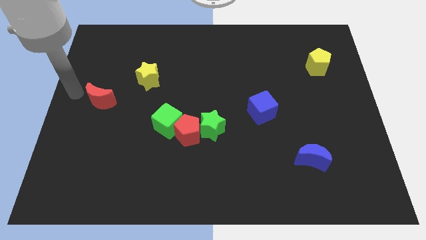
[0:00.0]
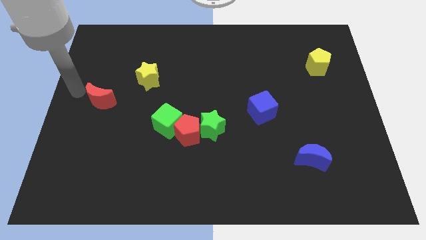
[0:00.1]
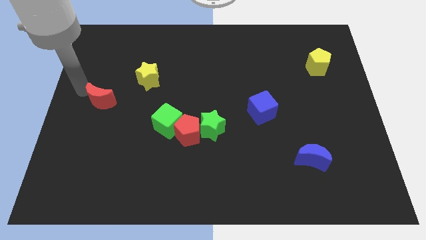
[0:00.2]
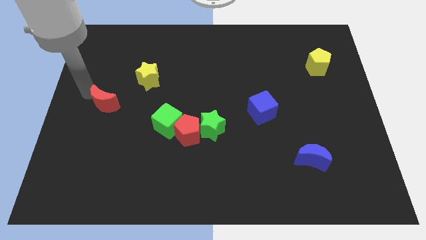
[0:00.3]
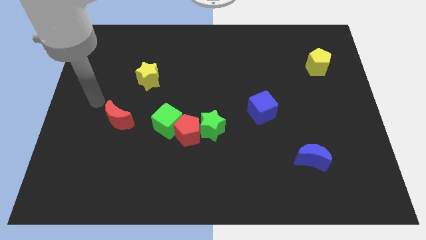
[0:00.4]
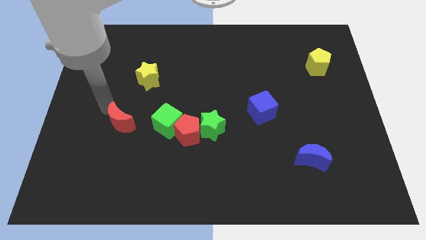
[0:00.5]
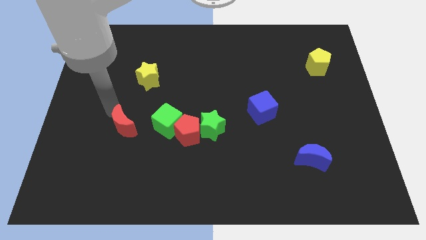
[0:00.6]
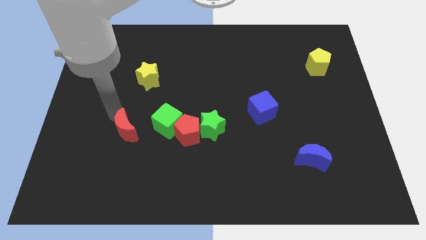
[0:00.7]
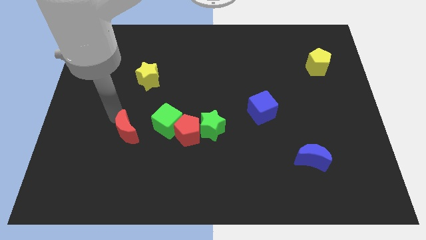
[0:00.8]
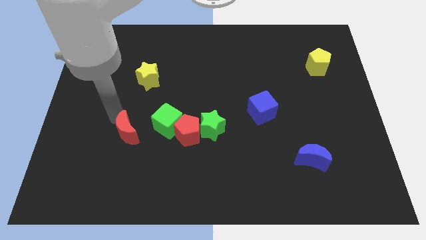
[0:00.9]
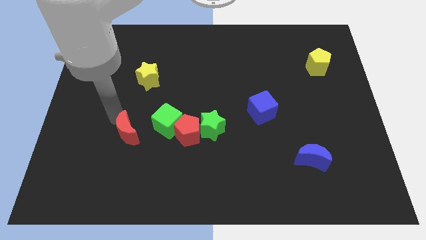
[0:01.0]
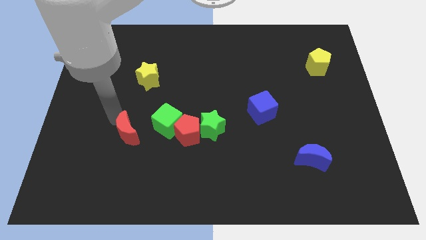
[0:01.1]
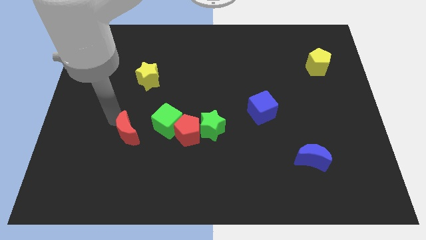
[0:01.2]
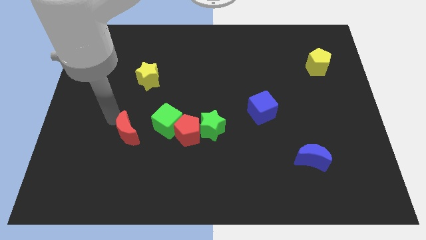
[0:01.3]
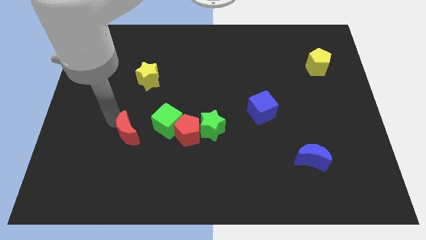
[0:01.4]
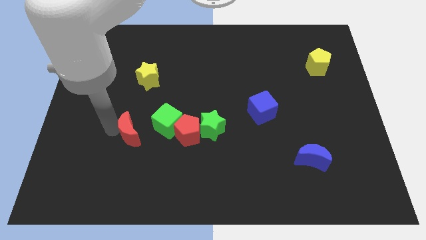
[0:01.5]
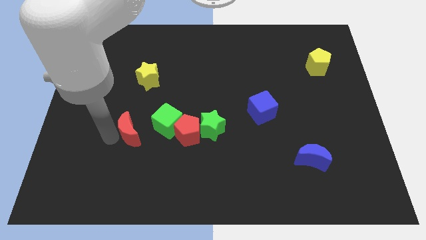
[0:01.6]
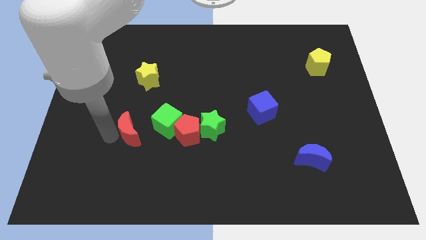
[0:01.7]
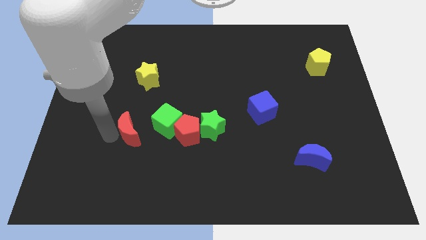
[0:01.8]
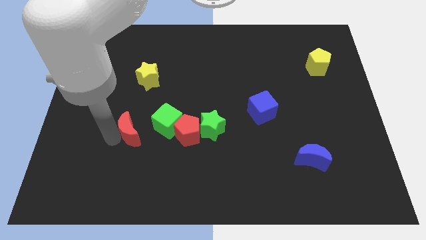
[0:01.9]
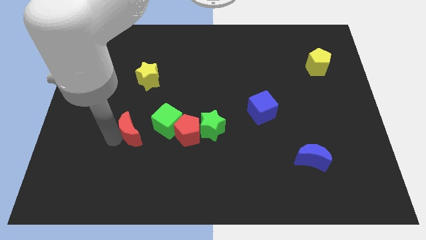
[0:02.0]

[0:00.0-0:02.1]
move the red crescent towards the left of the green cube

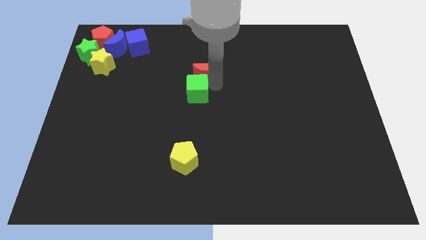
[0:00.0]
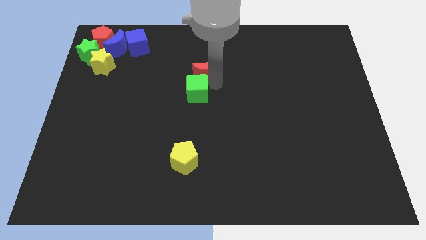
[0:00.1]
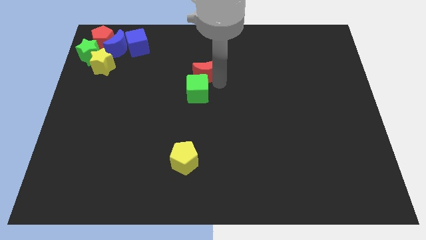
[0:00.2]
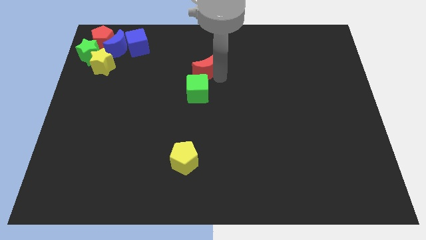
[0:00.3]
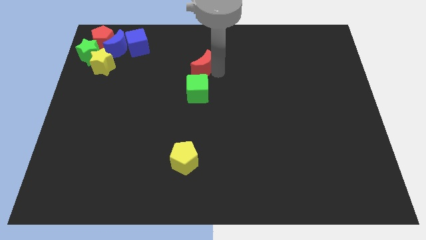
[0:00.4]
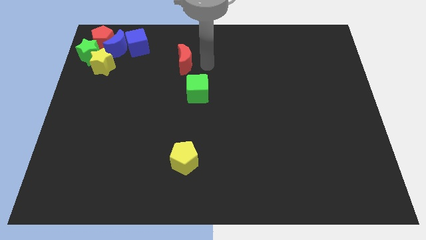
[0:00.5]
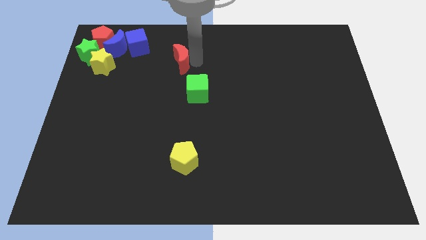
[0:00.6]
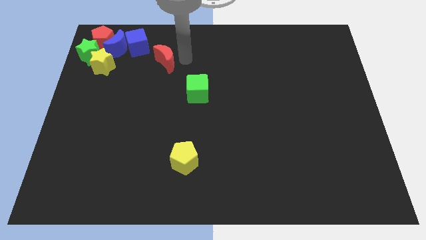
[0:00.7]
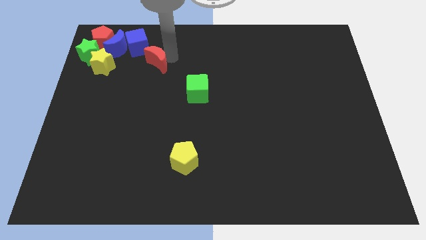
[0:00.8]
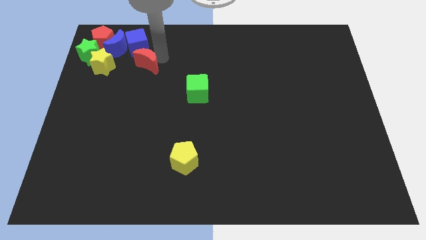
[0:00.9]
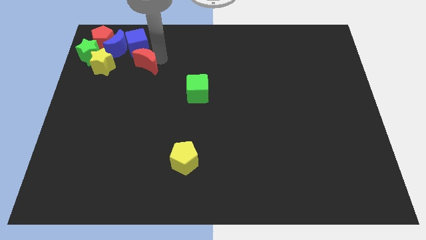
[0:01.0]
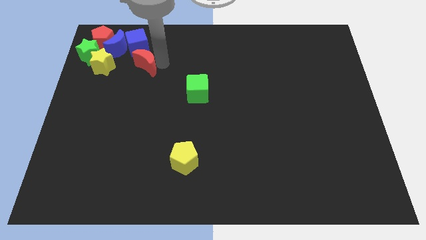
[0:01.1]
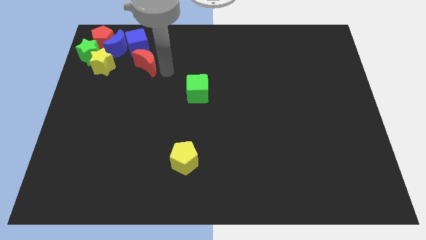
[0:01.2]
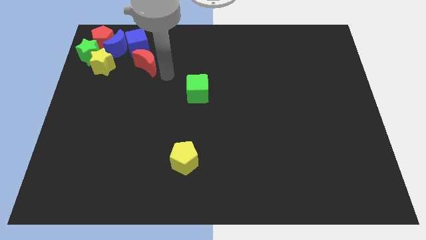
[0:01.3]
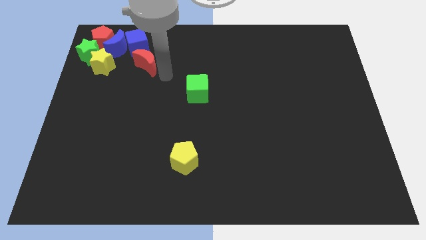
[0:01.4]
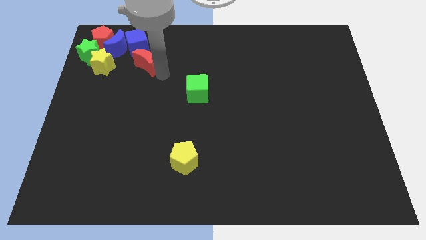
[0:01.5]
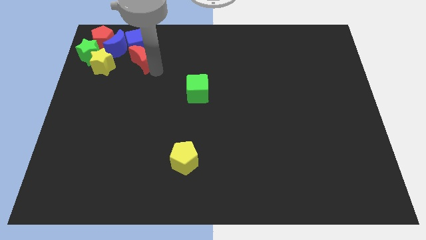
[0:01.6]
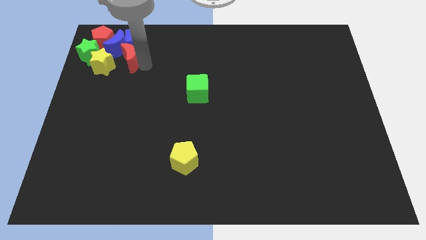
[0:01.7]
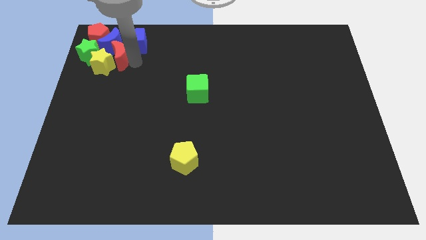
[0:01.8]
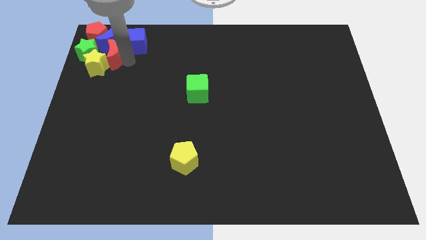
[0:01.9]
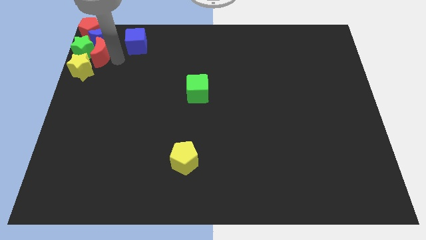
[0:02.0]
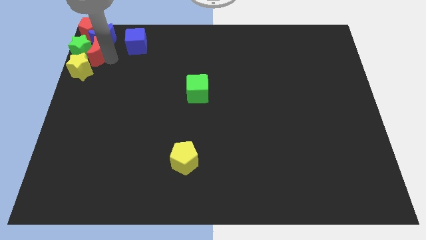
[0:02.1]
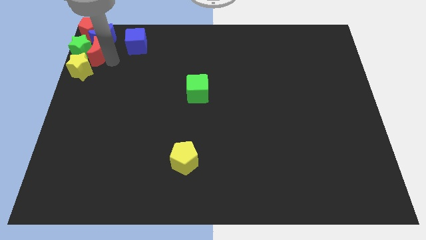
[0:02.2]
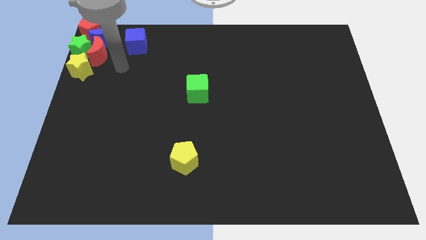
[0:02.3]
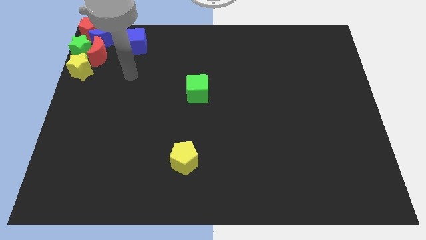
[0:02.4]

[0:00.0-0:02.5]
separate the red crescent from the green cube

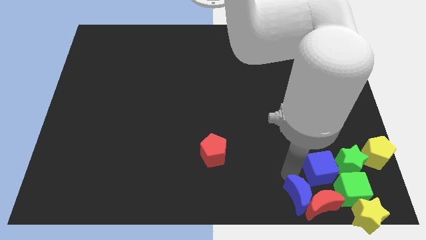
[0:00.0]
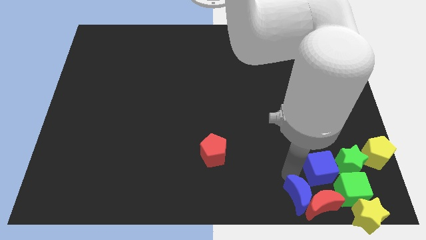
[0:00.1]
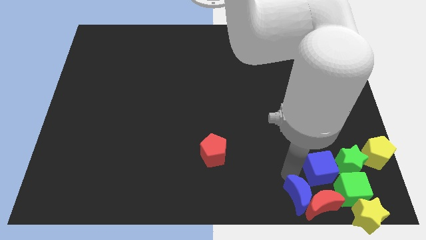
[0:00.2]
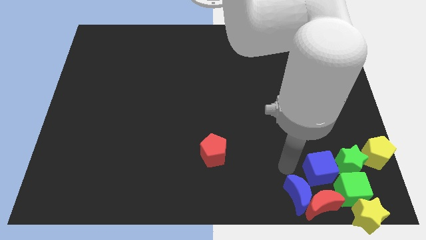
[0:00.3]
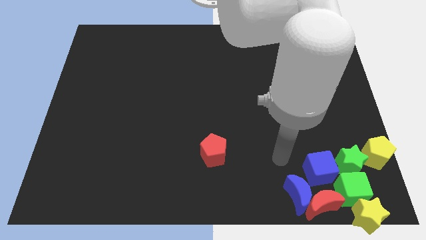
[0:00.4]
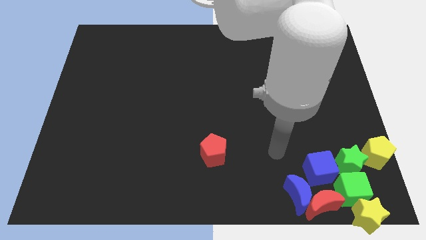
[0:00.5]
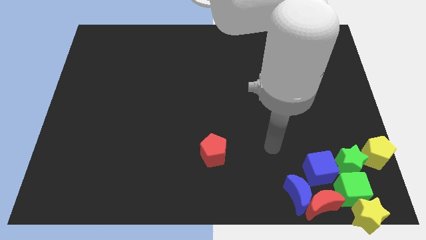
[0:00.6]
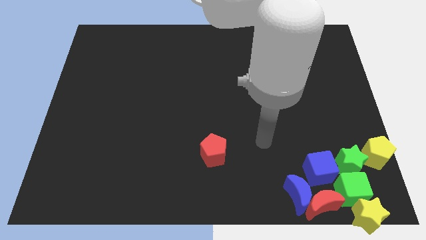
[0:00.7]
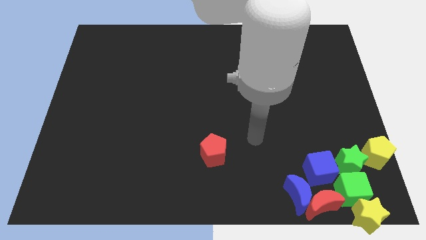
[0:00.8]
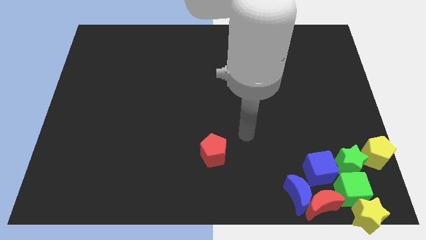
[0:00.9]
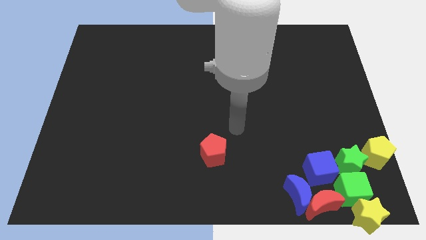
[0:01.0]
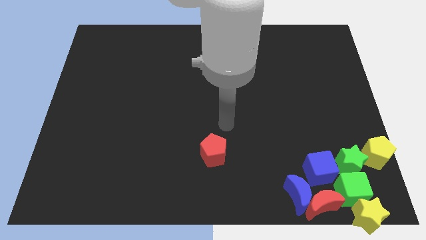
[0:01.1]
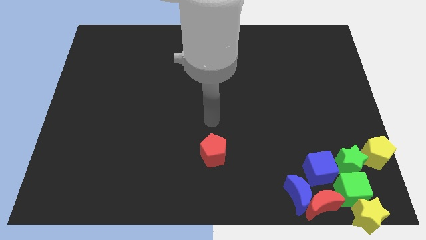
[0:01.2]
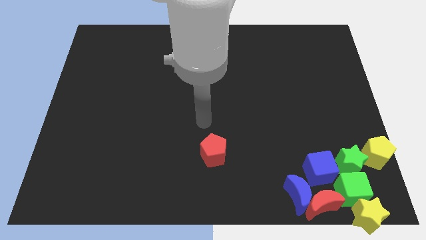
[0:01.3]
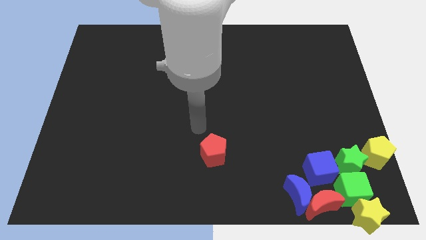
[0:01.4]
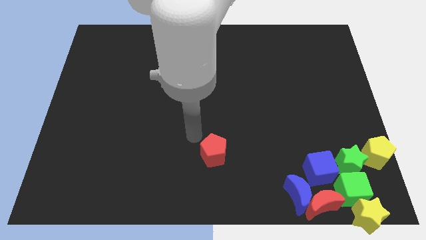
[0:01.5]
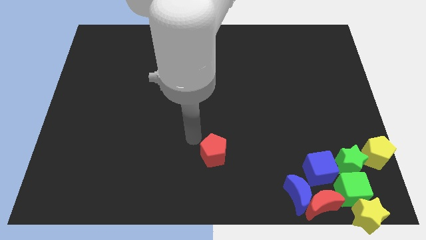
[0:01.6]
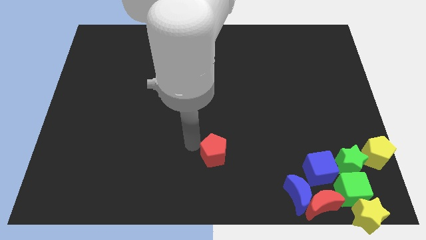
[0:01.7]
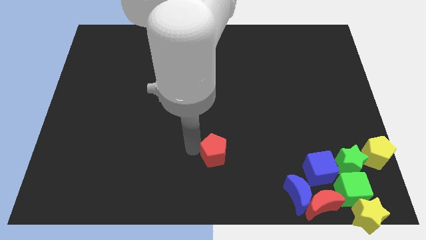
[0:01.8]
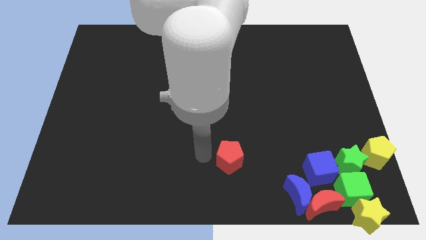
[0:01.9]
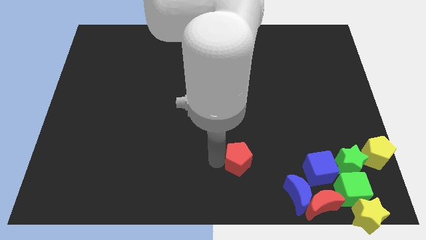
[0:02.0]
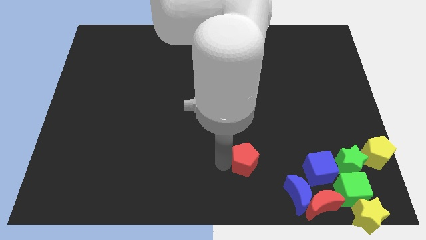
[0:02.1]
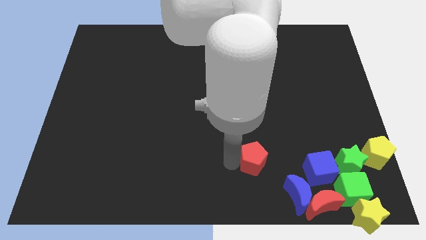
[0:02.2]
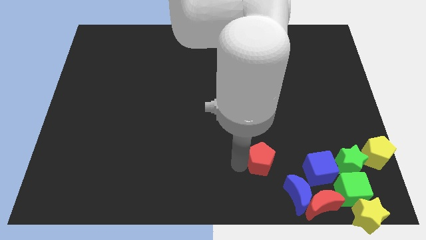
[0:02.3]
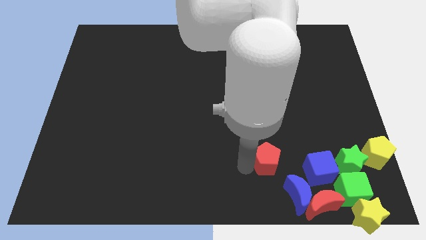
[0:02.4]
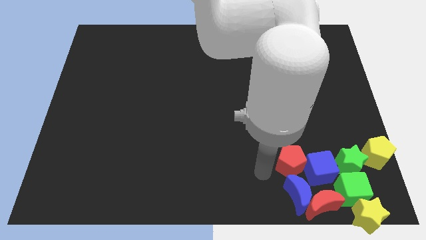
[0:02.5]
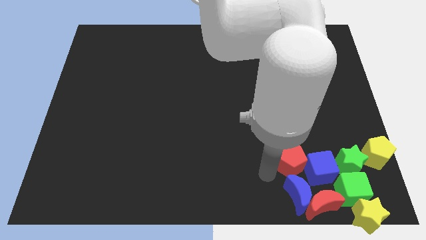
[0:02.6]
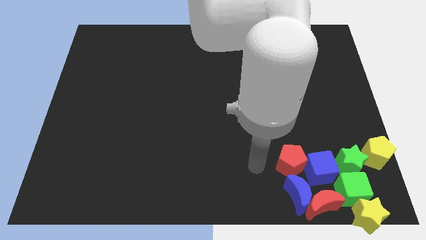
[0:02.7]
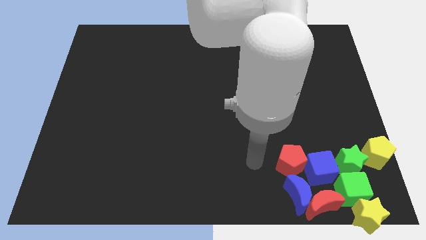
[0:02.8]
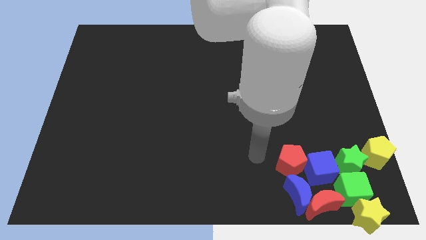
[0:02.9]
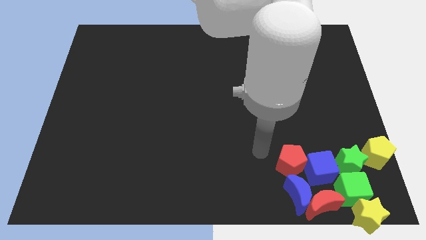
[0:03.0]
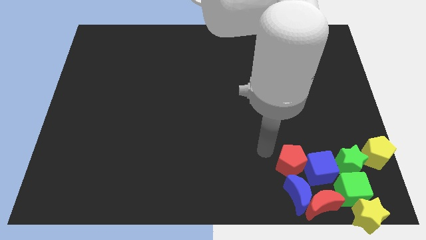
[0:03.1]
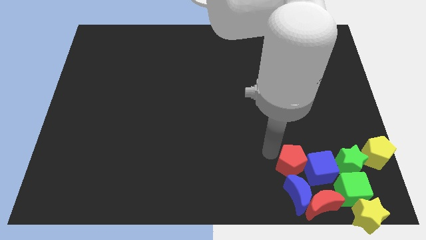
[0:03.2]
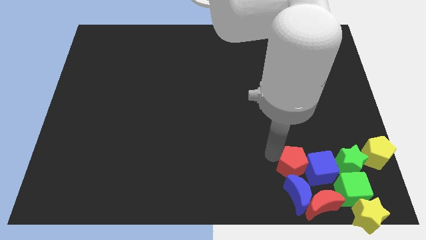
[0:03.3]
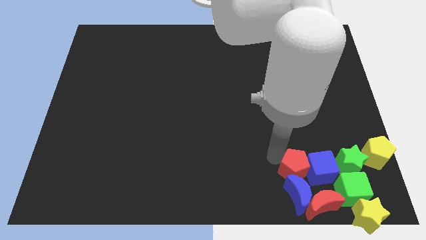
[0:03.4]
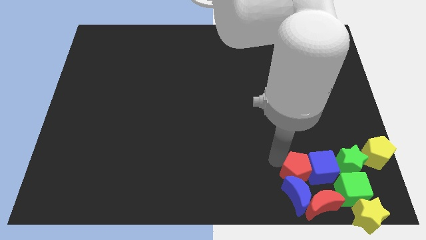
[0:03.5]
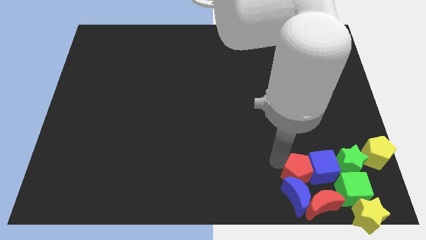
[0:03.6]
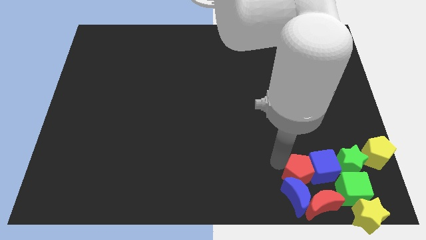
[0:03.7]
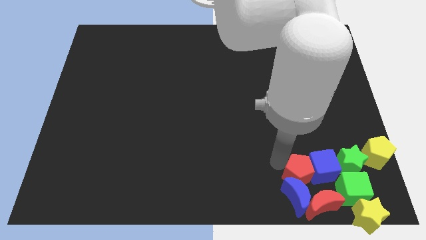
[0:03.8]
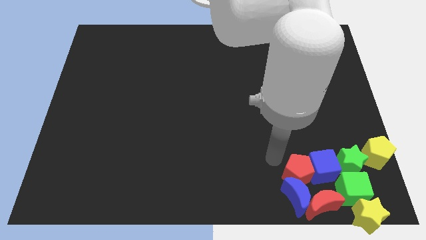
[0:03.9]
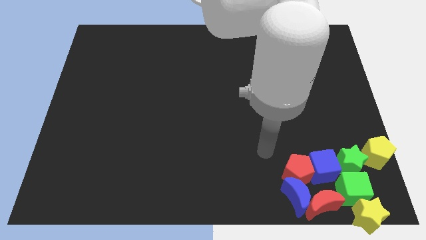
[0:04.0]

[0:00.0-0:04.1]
push the red pentagon left to the blue cube

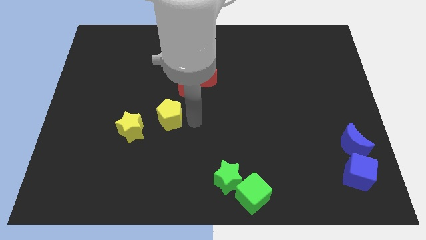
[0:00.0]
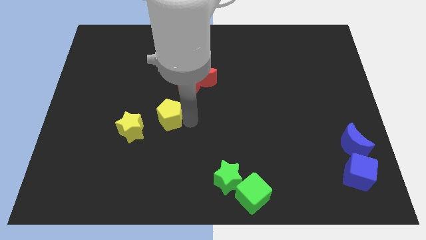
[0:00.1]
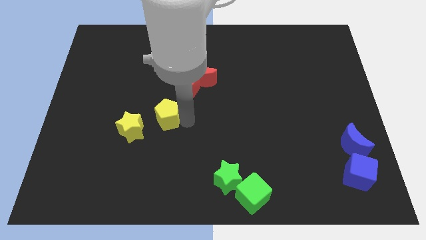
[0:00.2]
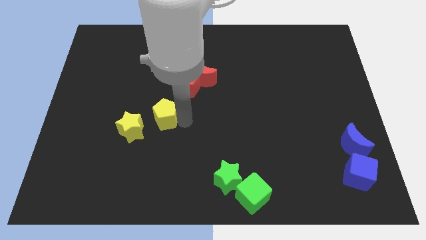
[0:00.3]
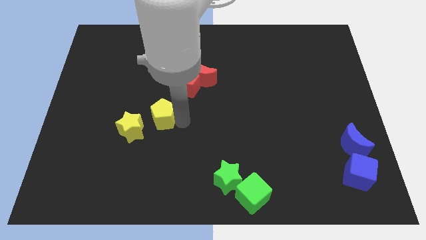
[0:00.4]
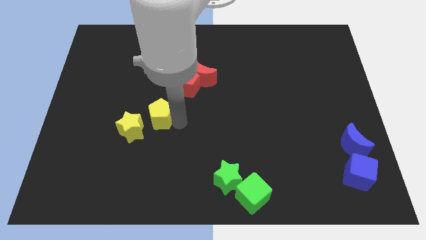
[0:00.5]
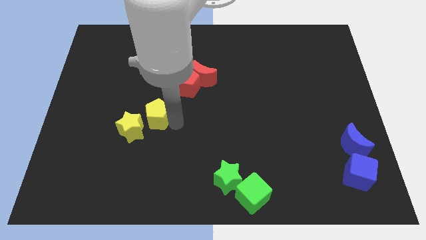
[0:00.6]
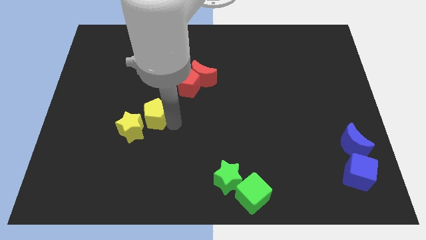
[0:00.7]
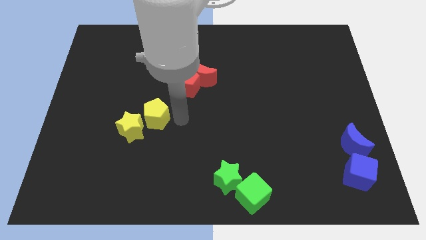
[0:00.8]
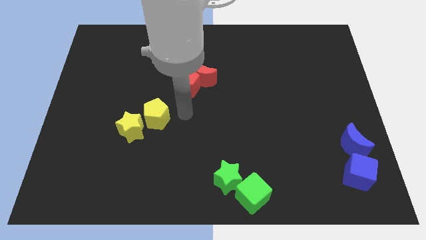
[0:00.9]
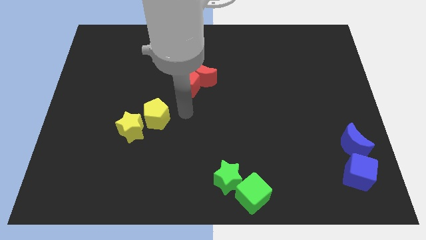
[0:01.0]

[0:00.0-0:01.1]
push the yellow pentagon into the yellow star
